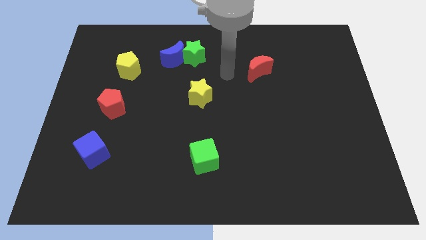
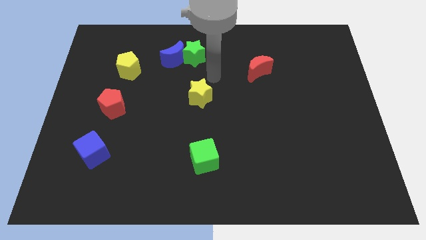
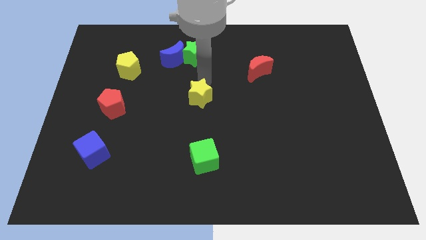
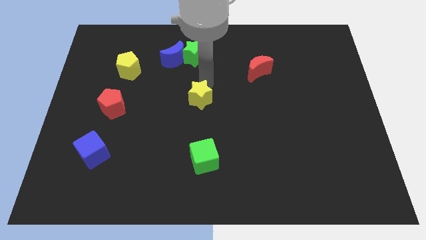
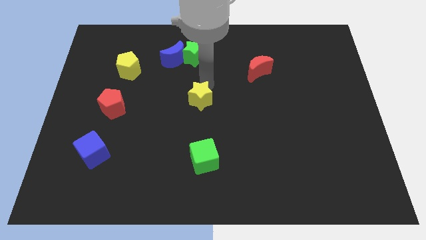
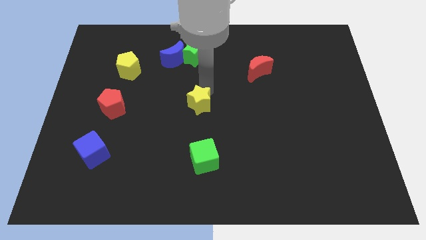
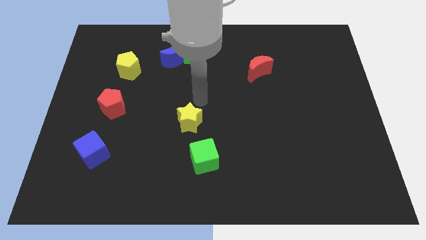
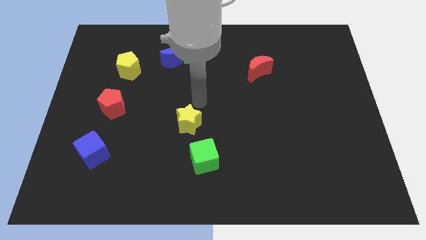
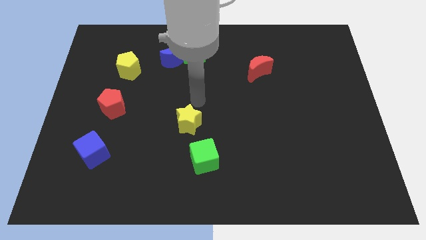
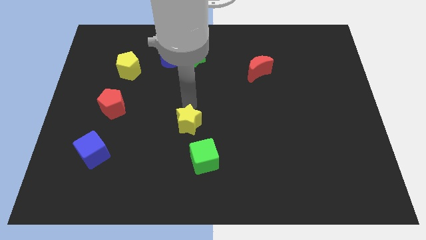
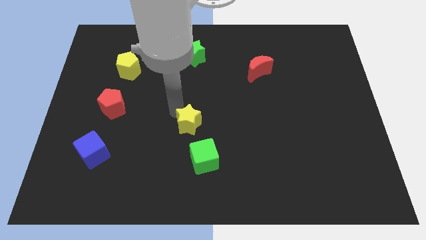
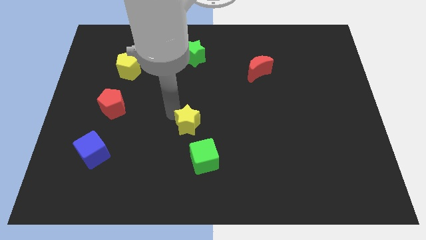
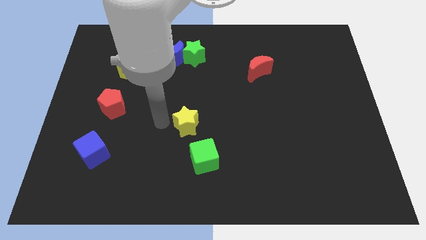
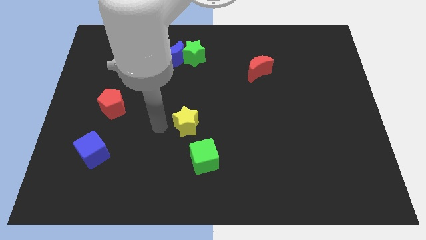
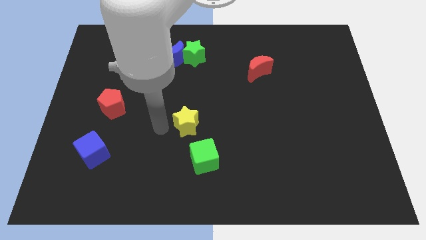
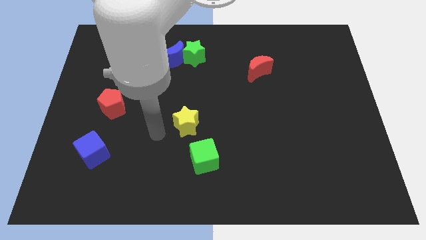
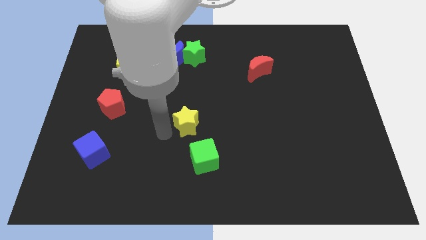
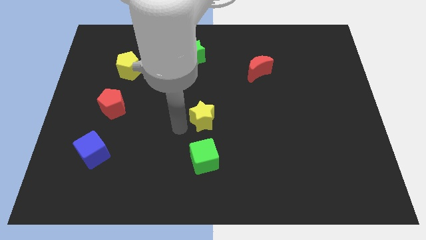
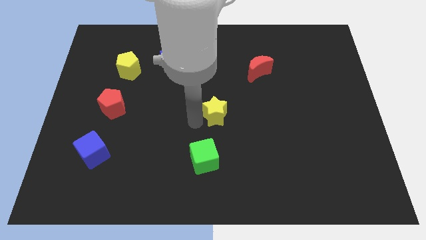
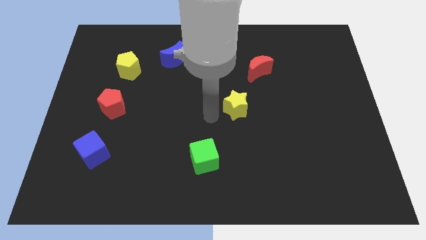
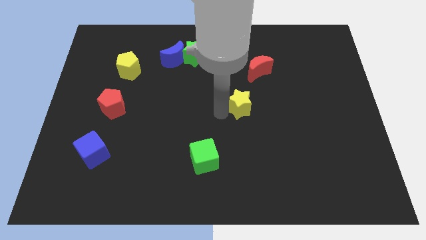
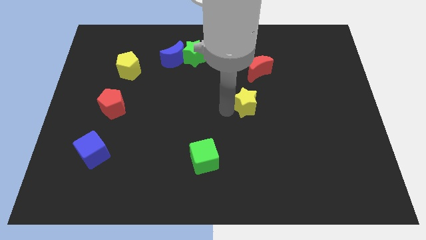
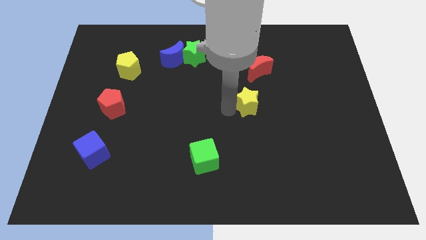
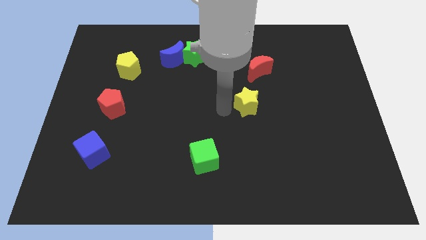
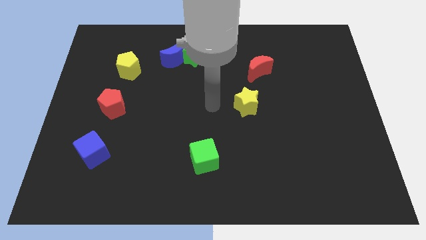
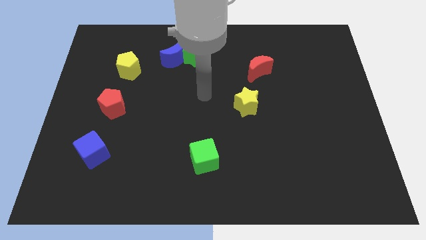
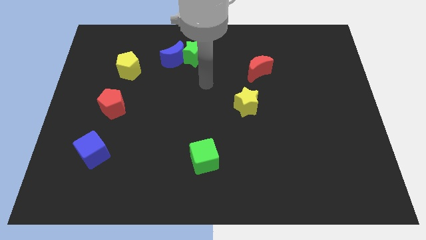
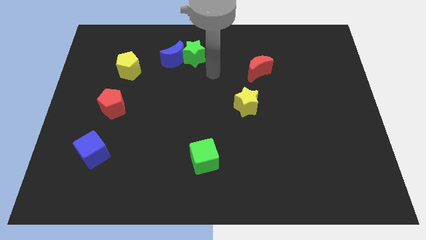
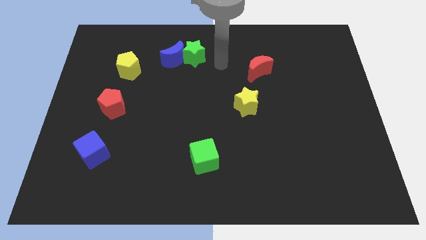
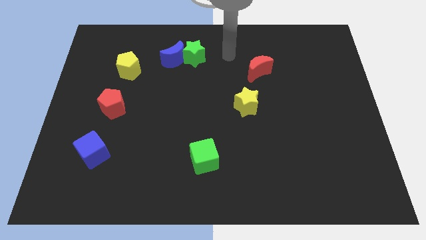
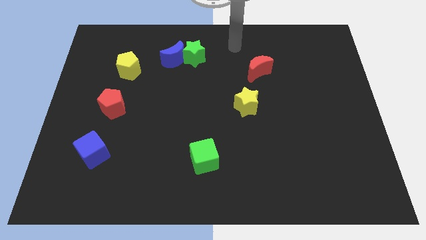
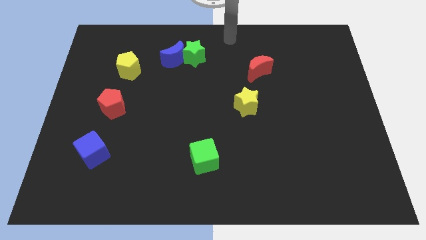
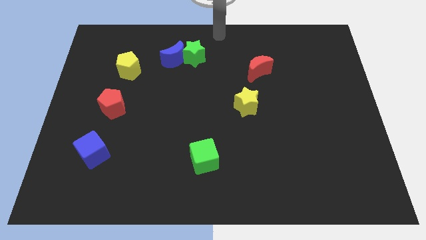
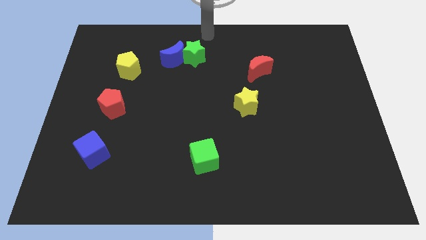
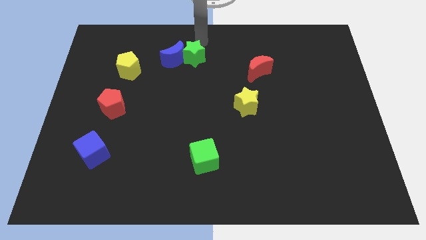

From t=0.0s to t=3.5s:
drag the yellow star diagonally bottom right to the green star

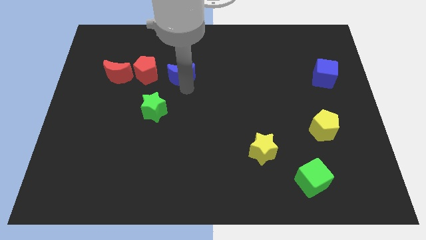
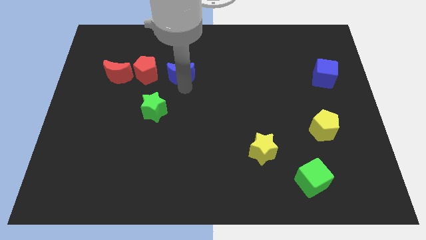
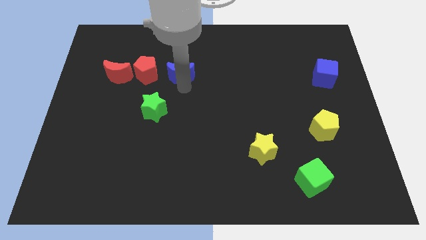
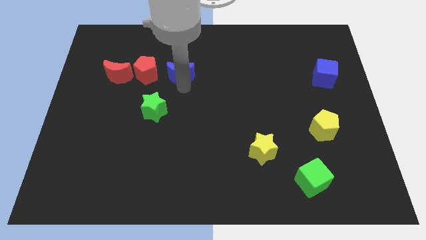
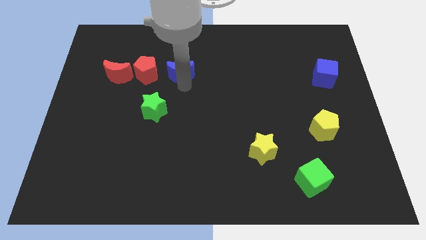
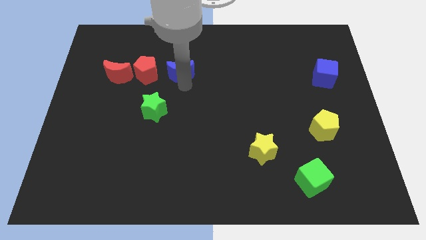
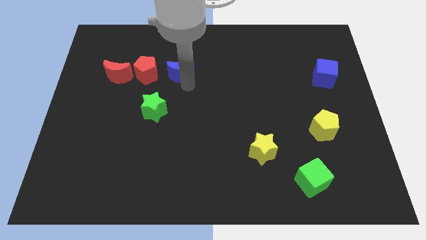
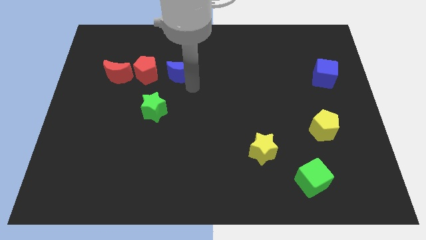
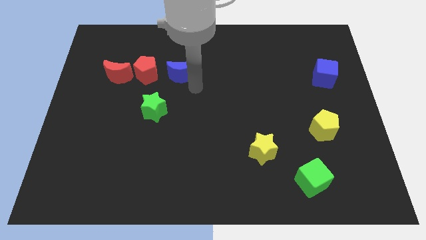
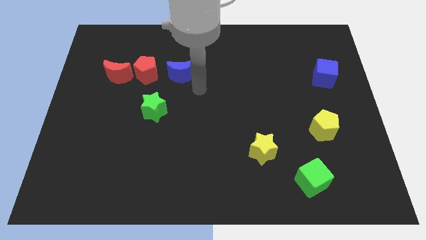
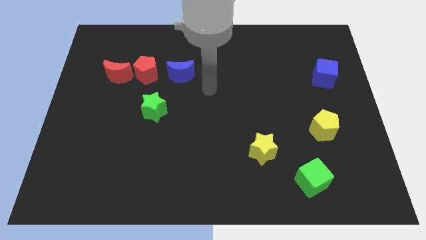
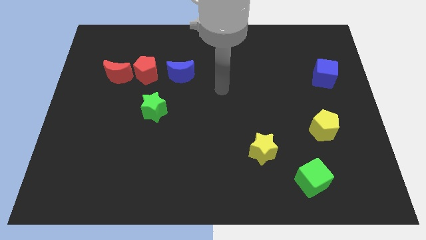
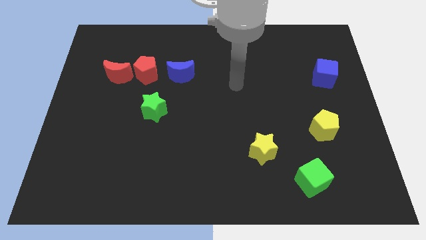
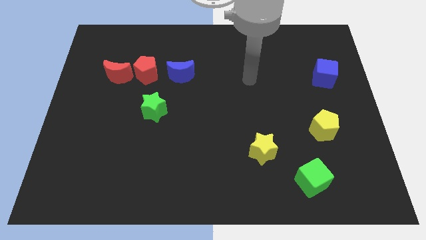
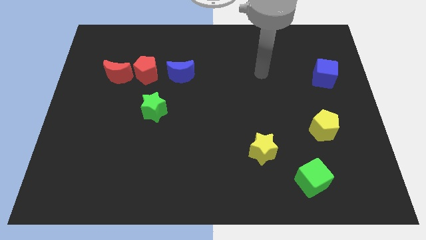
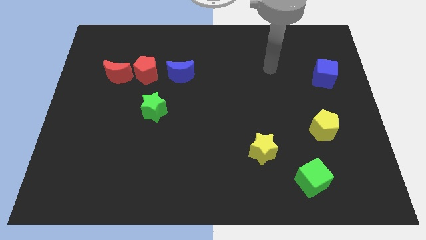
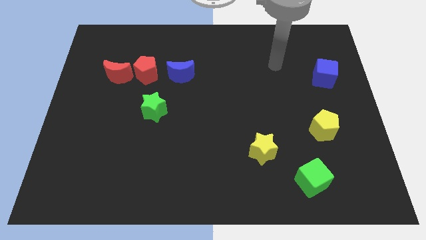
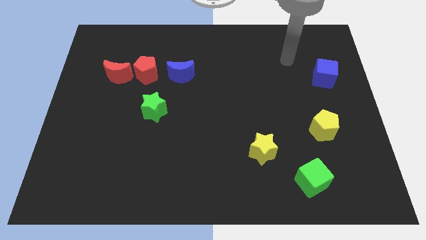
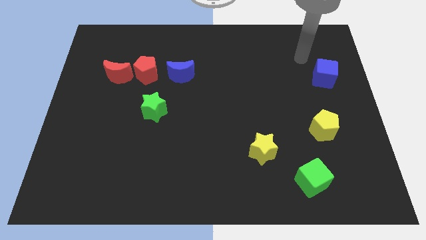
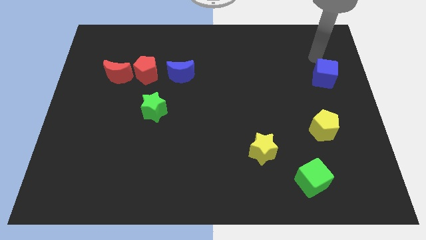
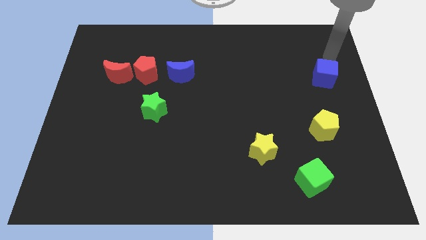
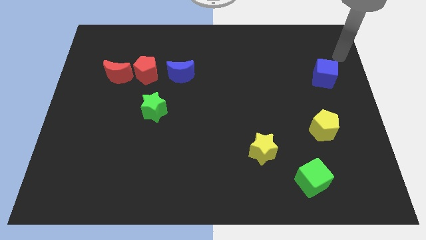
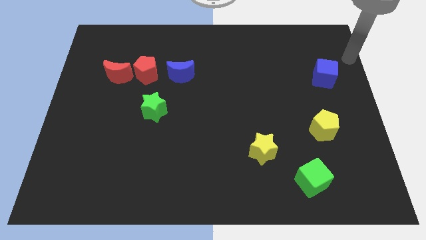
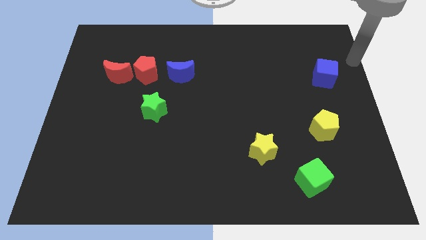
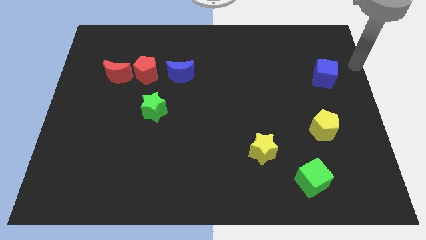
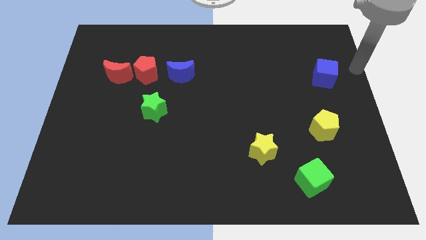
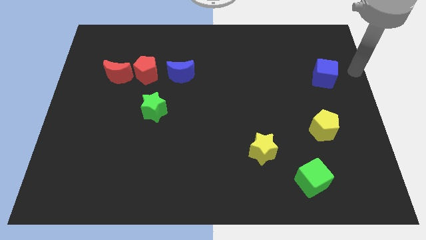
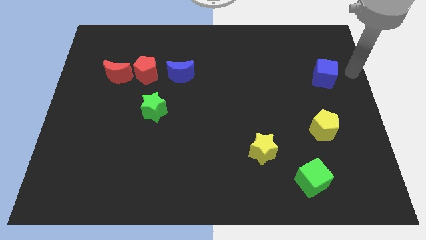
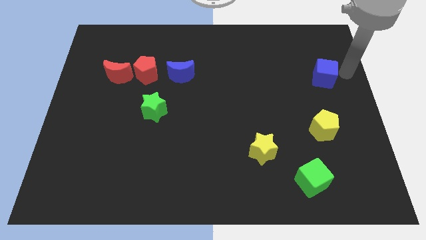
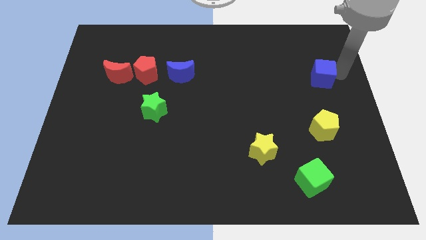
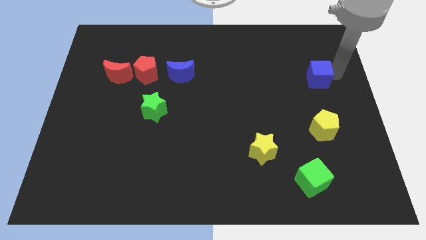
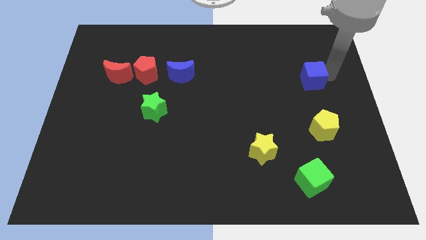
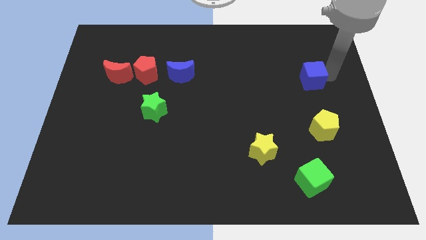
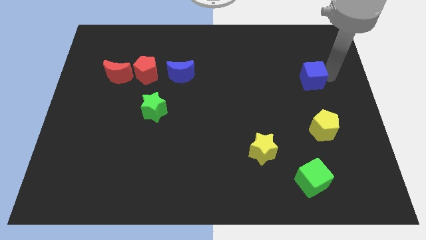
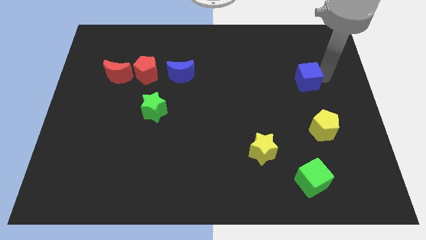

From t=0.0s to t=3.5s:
touch the right side of the blue cube

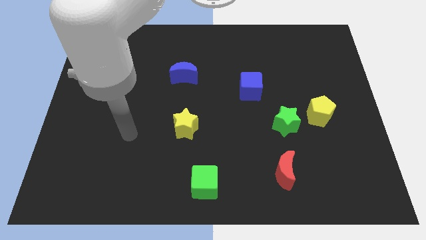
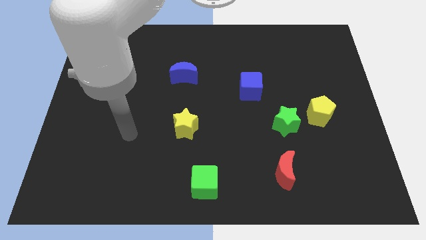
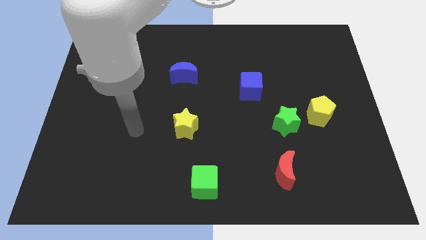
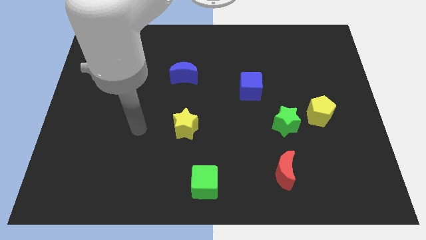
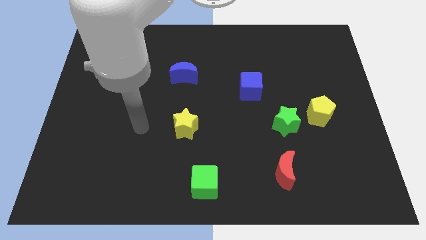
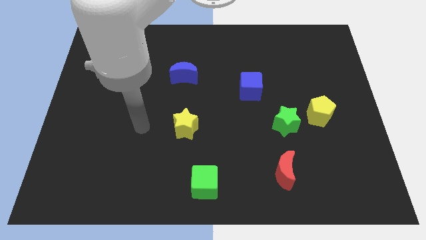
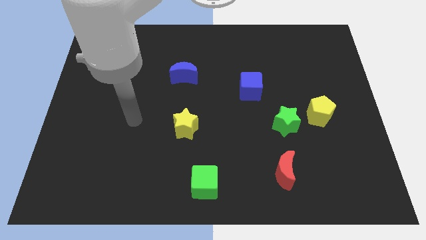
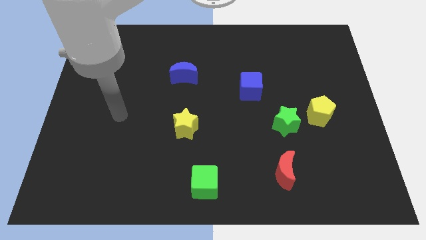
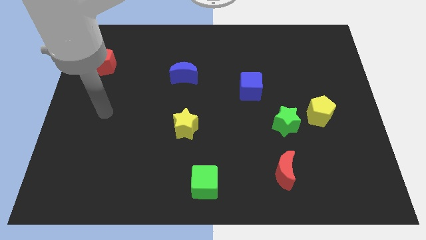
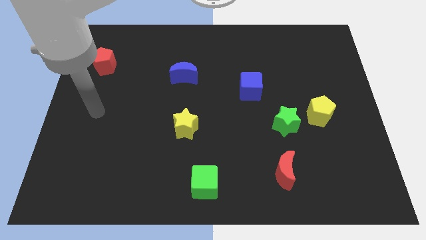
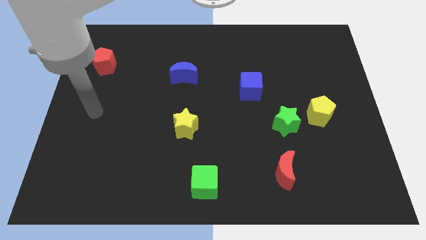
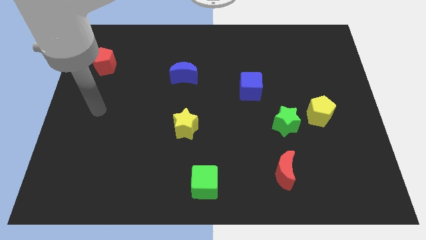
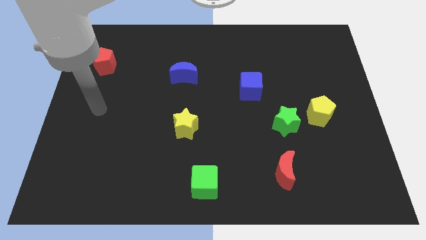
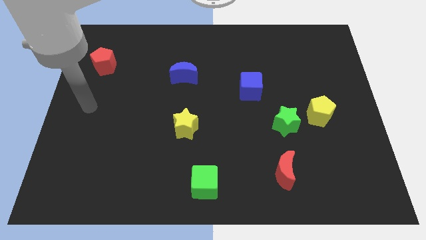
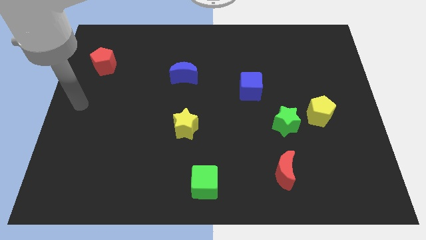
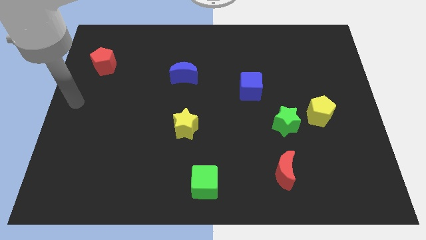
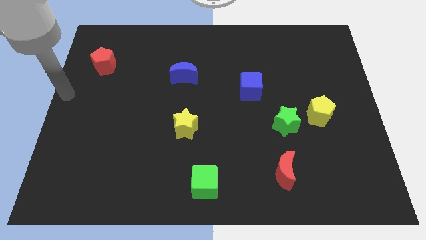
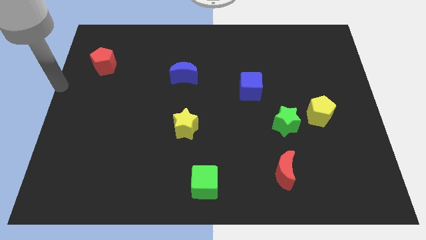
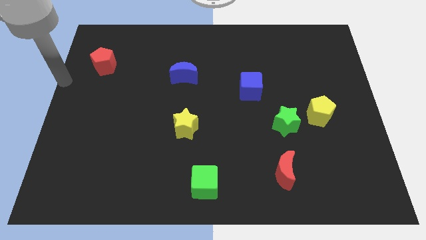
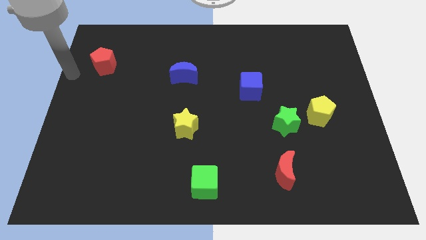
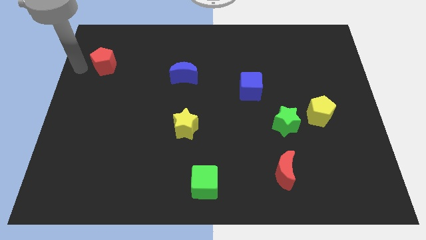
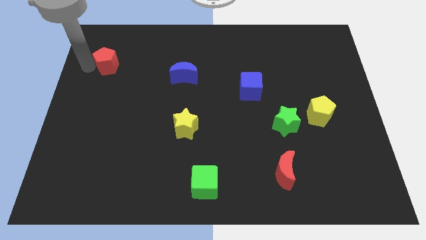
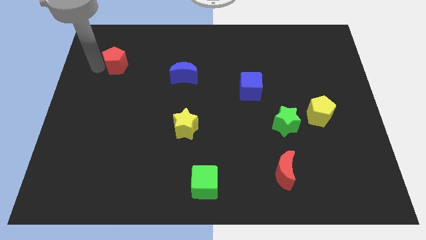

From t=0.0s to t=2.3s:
point your arm close to red pentagon
